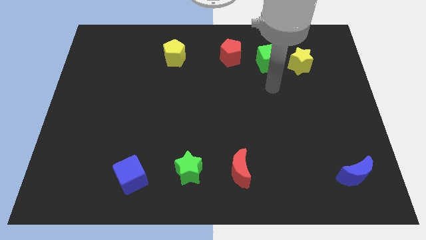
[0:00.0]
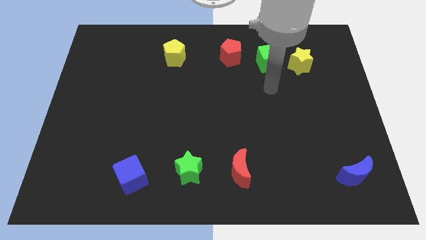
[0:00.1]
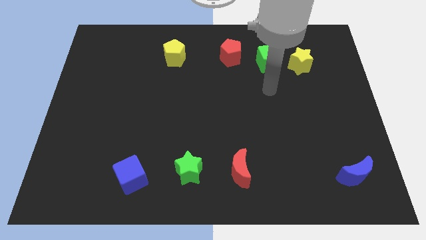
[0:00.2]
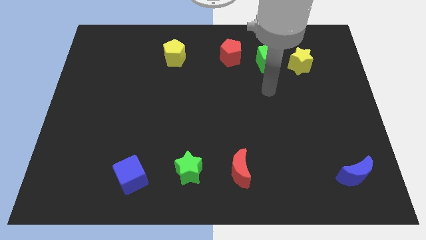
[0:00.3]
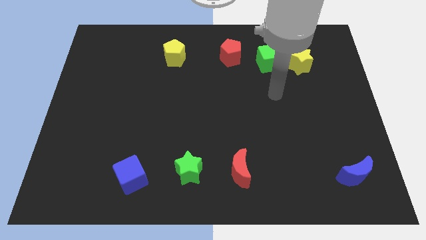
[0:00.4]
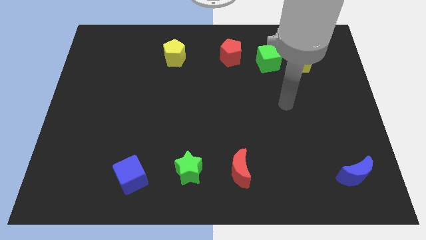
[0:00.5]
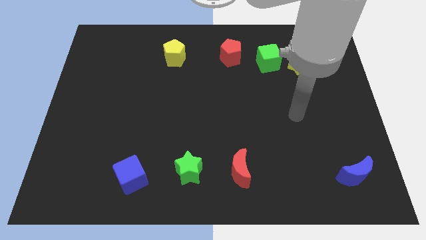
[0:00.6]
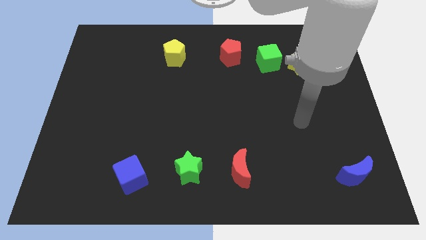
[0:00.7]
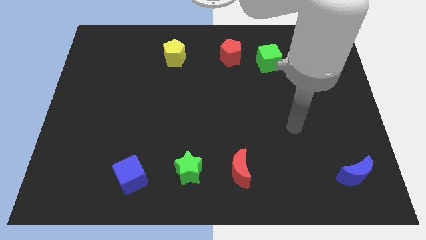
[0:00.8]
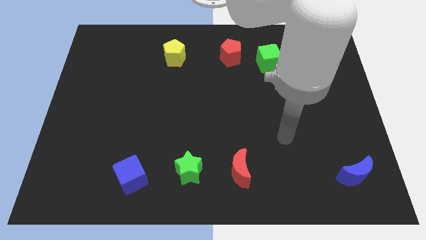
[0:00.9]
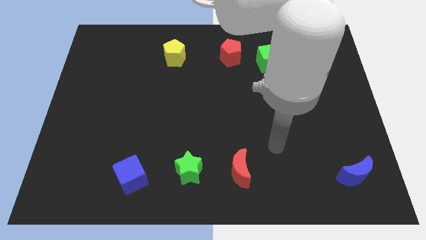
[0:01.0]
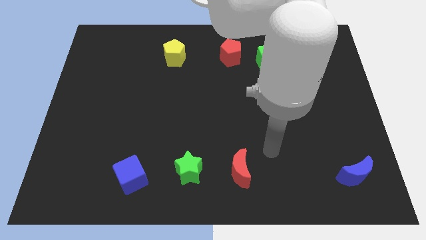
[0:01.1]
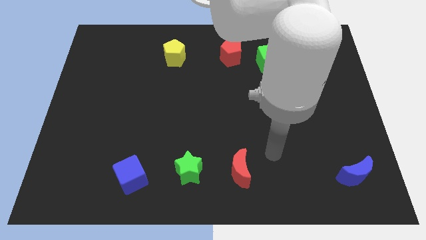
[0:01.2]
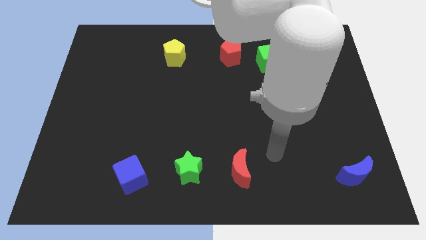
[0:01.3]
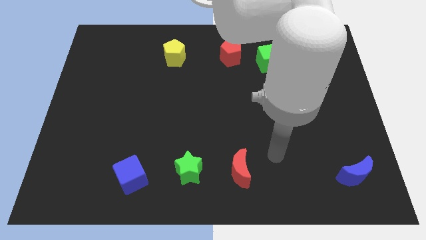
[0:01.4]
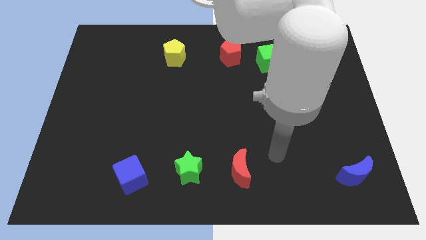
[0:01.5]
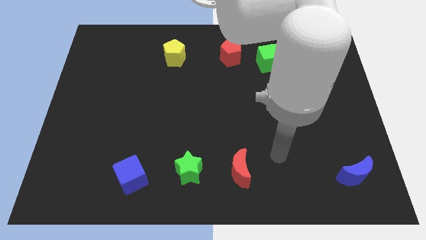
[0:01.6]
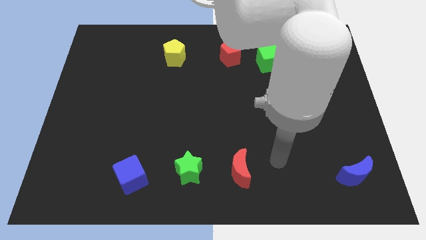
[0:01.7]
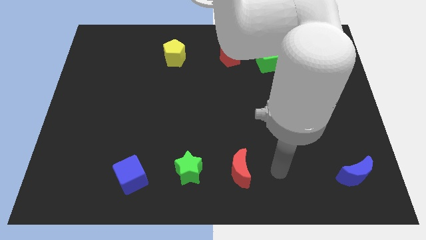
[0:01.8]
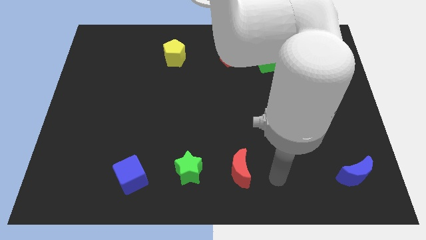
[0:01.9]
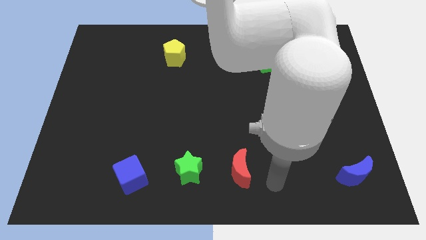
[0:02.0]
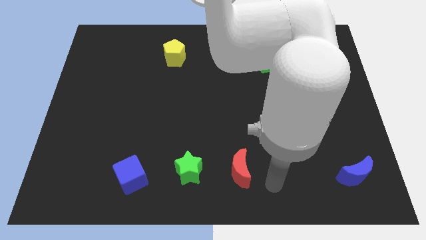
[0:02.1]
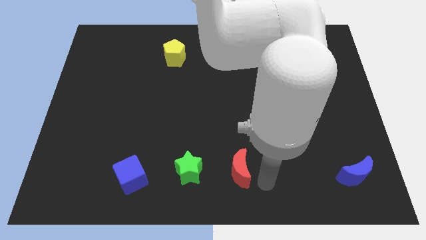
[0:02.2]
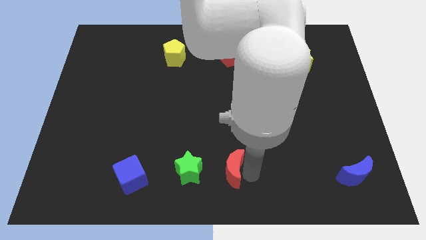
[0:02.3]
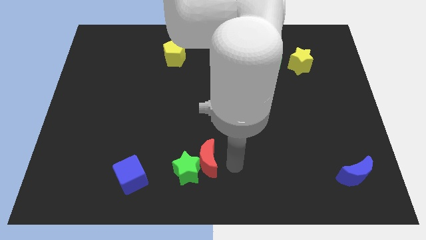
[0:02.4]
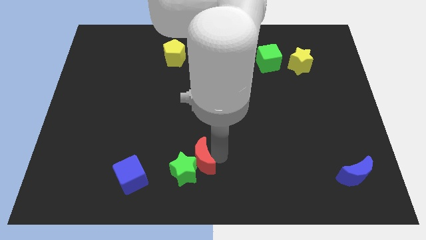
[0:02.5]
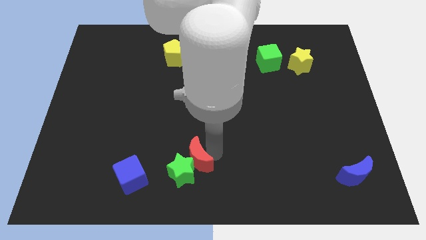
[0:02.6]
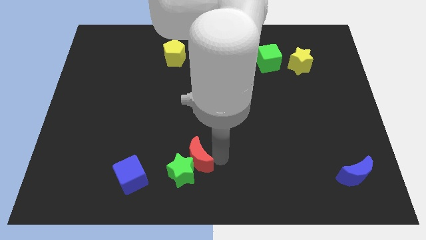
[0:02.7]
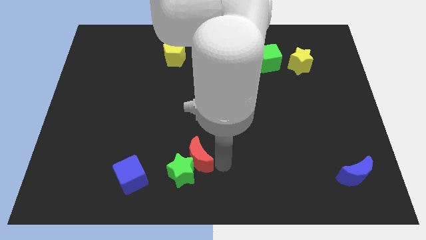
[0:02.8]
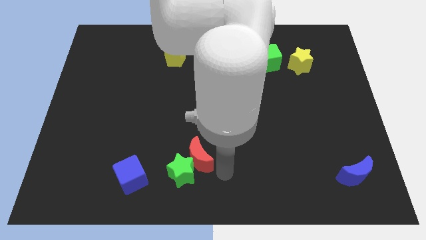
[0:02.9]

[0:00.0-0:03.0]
move the red moon into the green star

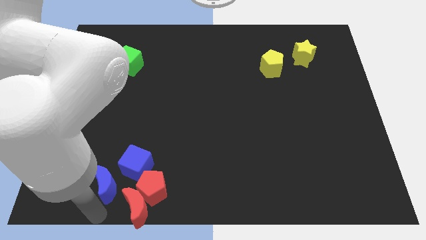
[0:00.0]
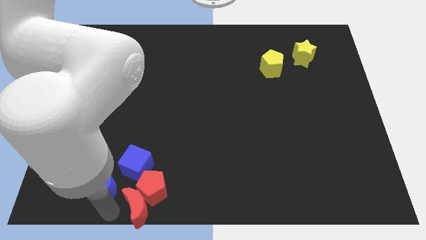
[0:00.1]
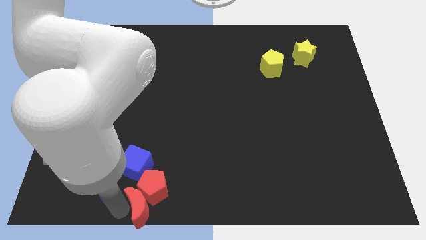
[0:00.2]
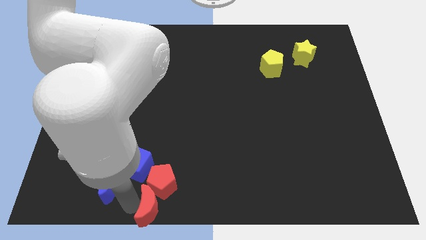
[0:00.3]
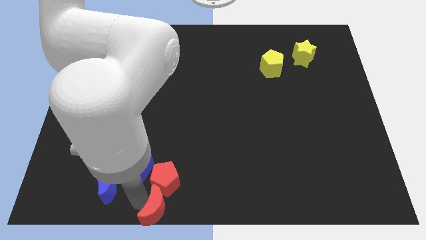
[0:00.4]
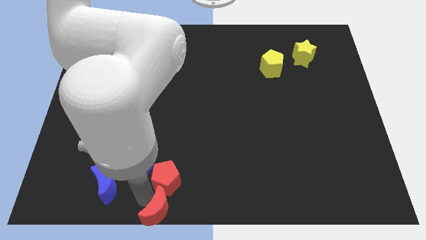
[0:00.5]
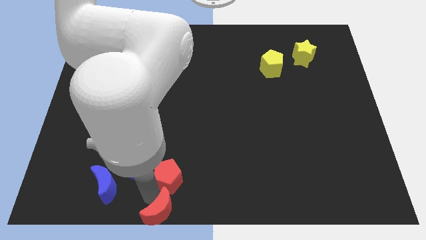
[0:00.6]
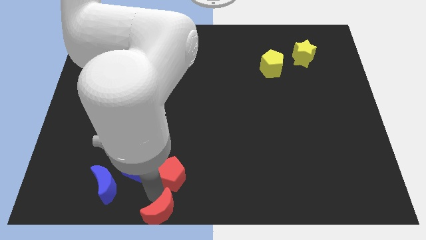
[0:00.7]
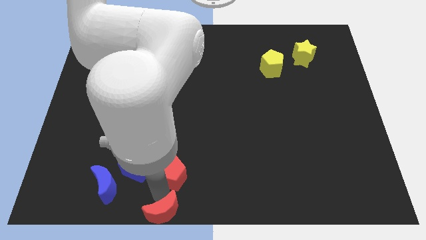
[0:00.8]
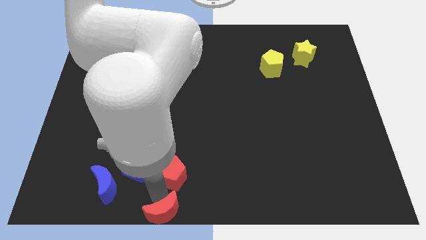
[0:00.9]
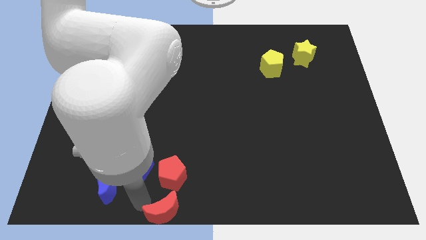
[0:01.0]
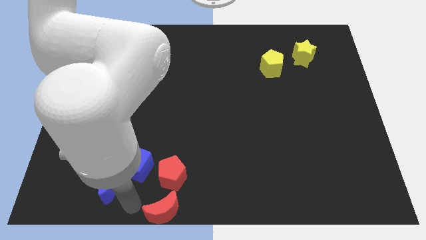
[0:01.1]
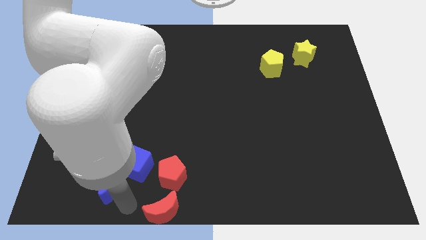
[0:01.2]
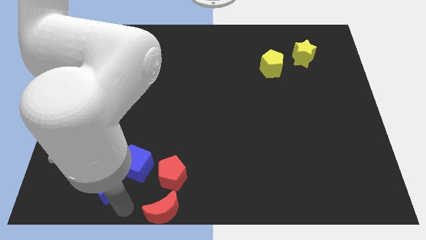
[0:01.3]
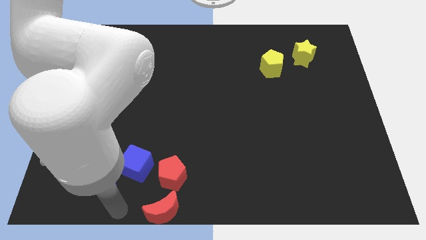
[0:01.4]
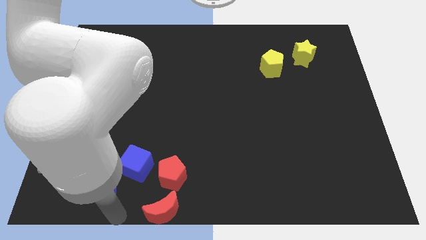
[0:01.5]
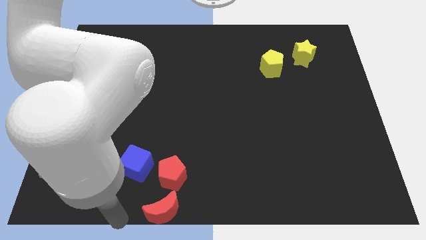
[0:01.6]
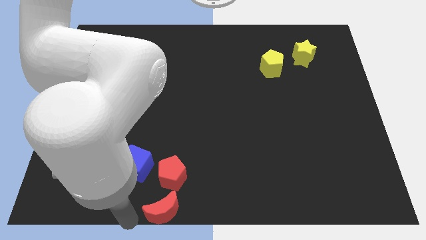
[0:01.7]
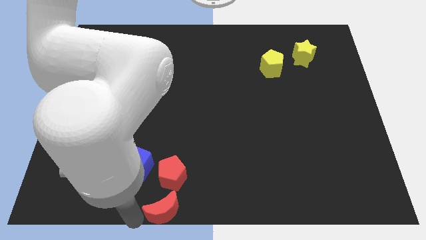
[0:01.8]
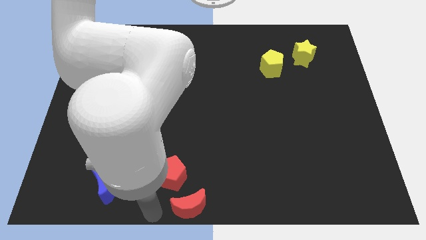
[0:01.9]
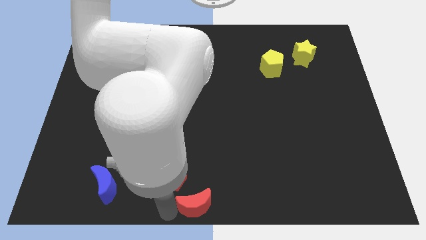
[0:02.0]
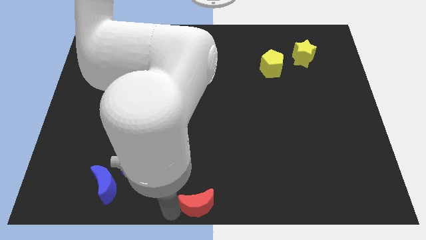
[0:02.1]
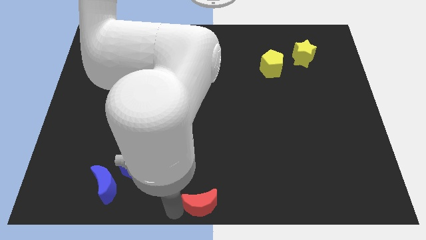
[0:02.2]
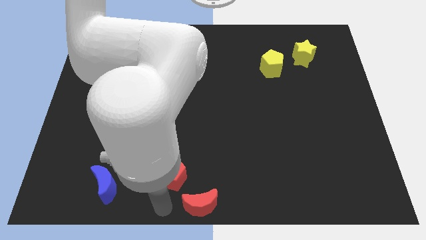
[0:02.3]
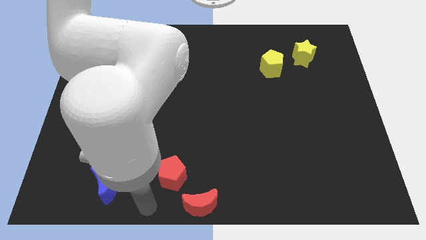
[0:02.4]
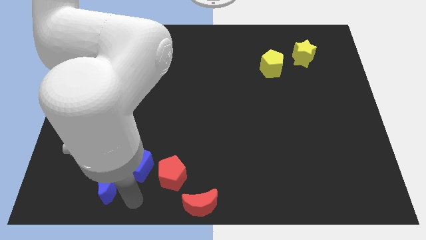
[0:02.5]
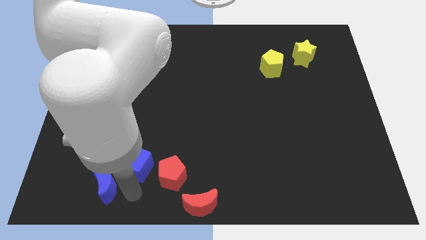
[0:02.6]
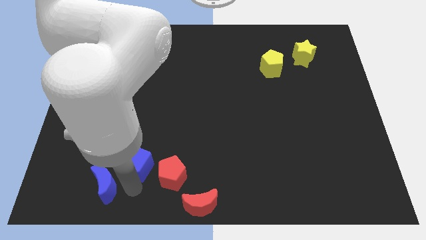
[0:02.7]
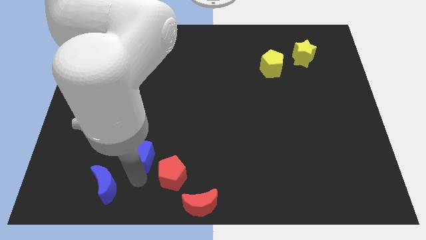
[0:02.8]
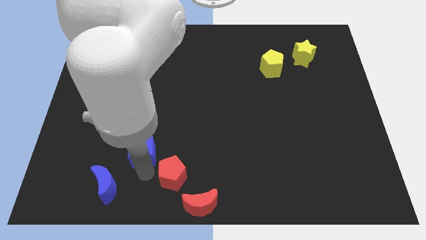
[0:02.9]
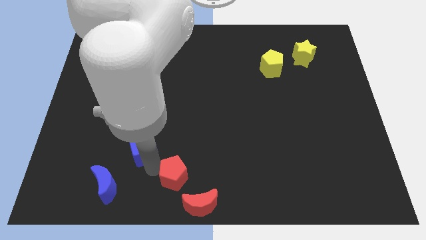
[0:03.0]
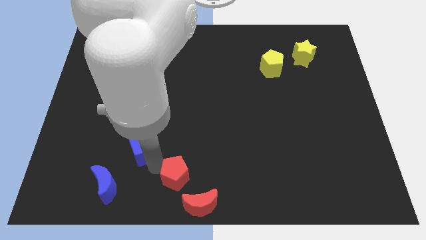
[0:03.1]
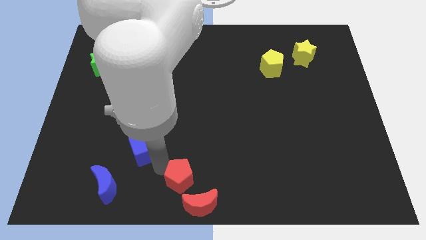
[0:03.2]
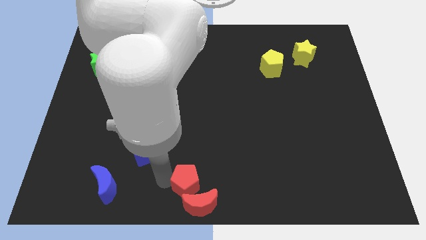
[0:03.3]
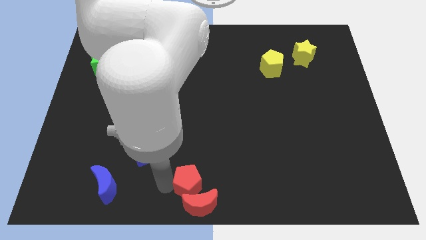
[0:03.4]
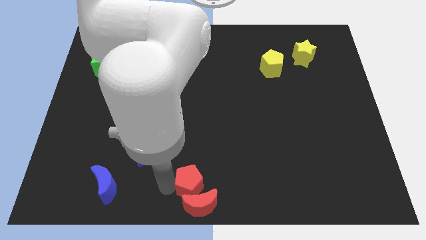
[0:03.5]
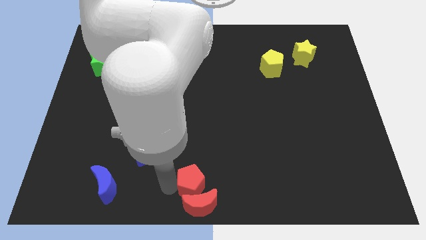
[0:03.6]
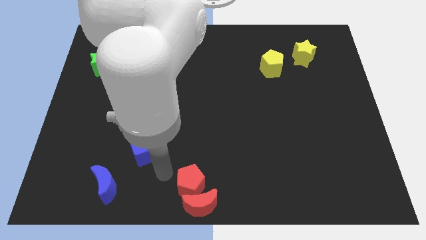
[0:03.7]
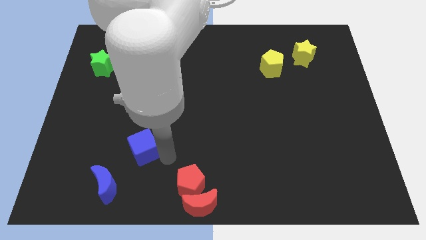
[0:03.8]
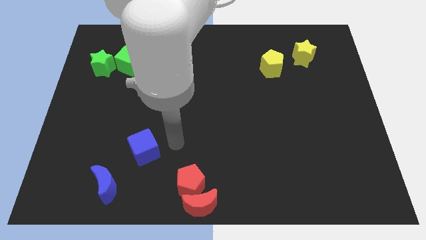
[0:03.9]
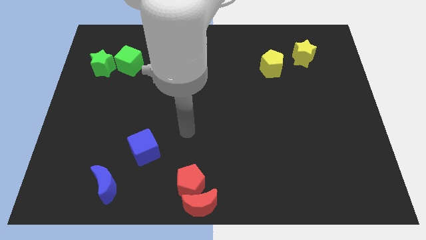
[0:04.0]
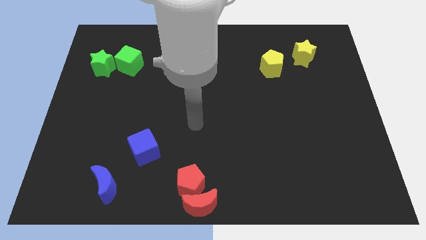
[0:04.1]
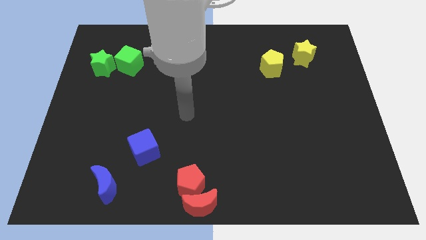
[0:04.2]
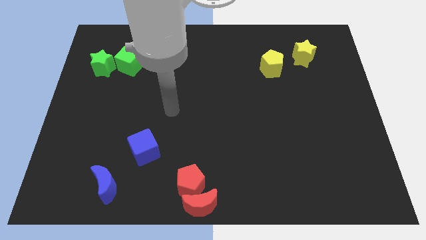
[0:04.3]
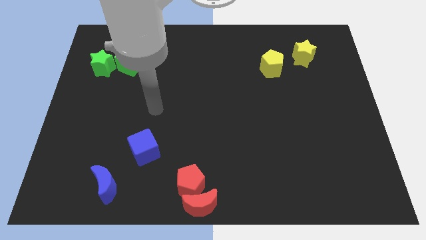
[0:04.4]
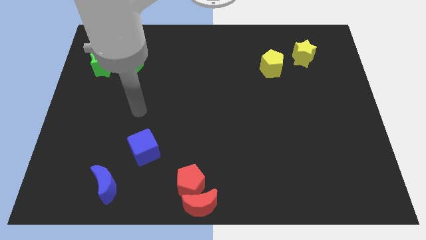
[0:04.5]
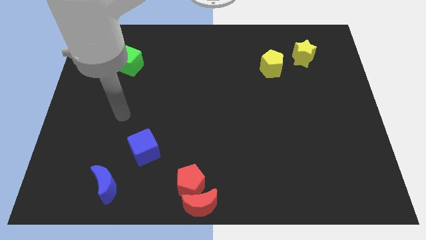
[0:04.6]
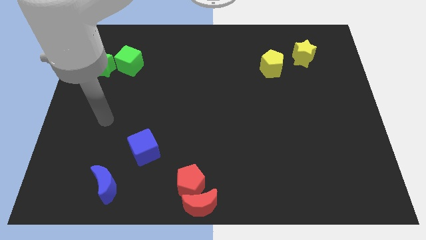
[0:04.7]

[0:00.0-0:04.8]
move red moon and red pentagon to the bottom center

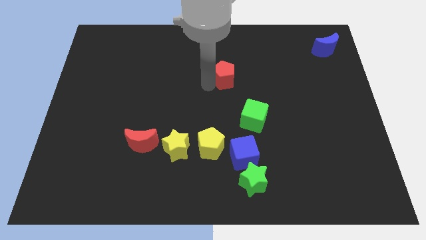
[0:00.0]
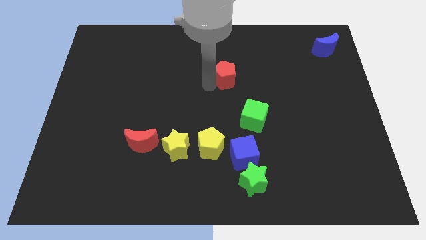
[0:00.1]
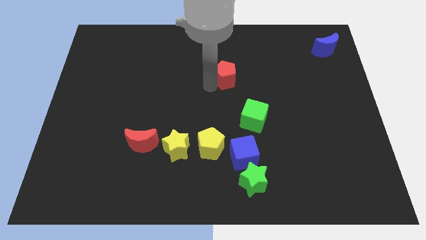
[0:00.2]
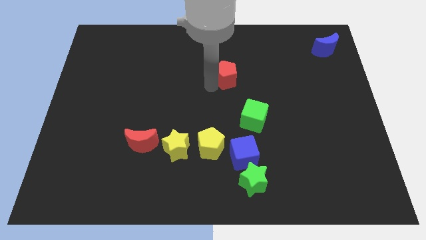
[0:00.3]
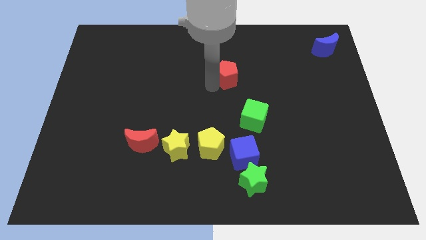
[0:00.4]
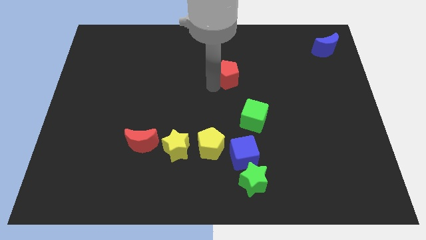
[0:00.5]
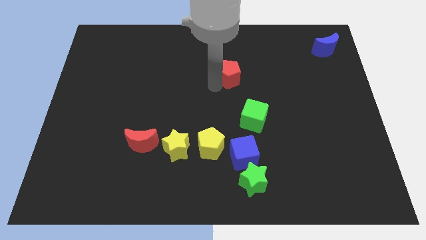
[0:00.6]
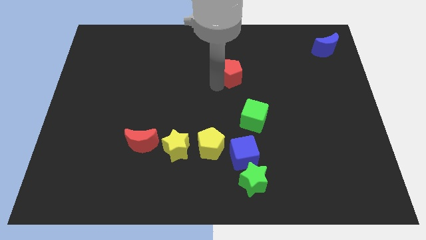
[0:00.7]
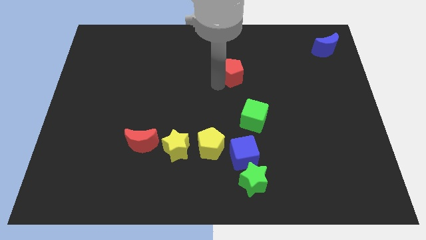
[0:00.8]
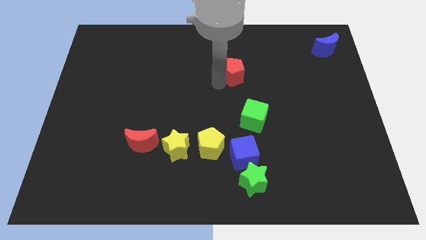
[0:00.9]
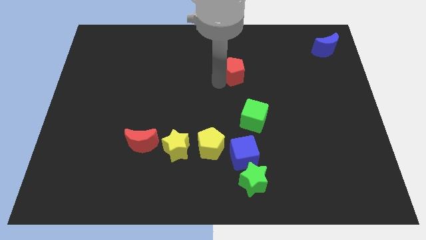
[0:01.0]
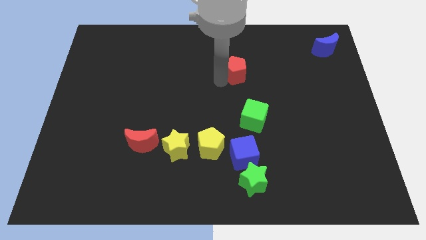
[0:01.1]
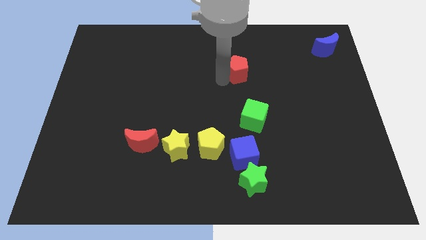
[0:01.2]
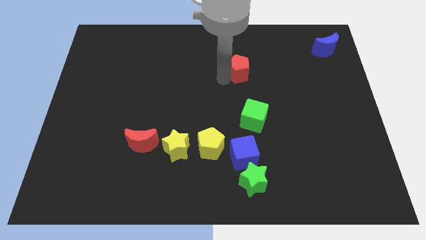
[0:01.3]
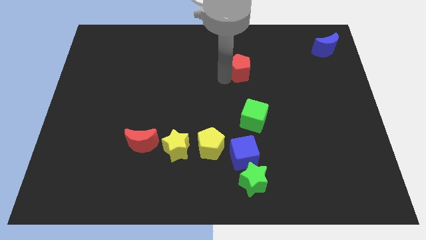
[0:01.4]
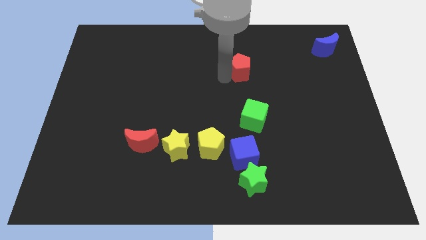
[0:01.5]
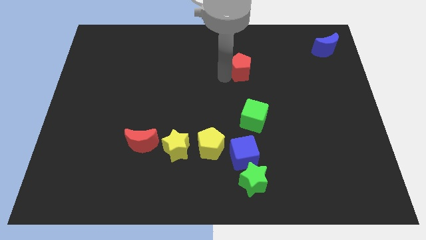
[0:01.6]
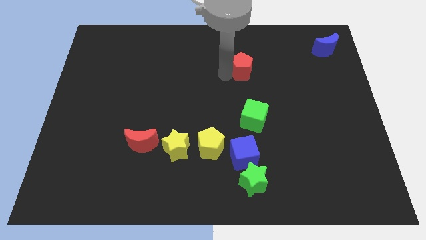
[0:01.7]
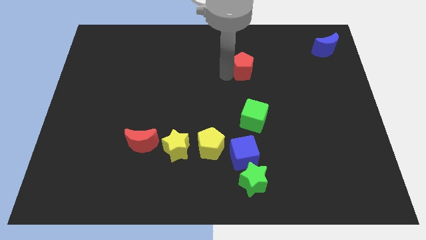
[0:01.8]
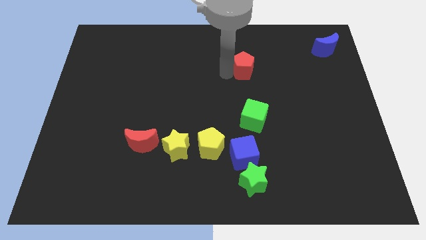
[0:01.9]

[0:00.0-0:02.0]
push the red pentagon towards blue moon
